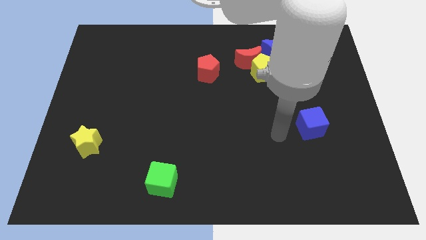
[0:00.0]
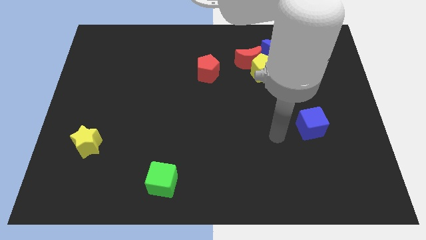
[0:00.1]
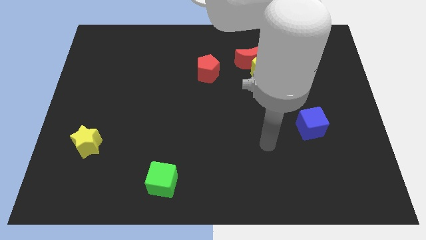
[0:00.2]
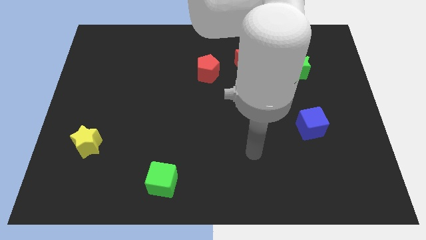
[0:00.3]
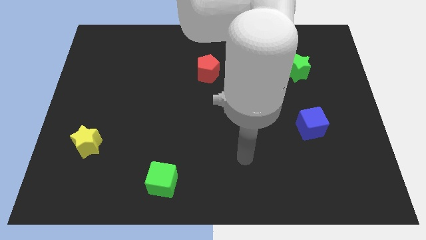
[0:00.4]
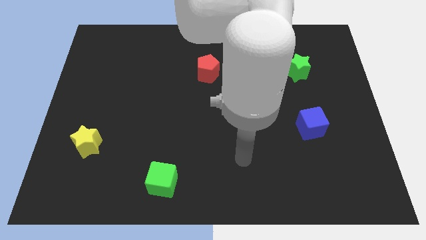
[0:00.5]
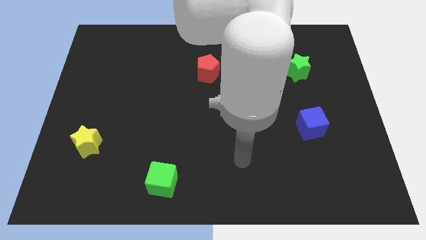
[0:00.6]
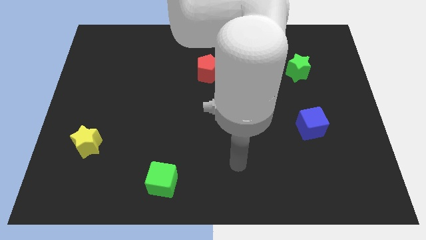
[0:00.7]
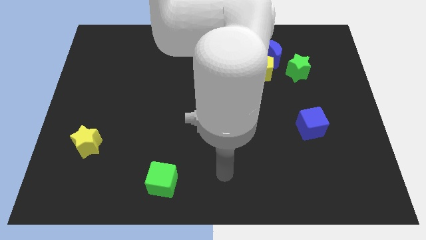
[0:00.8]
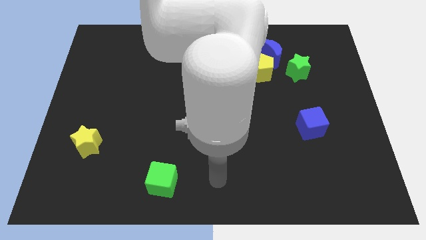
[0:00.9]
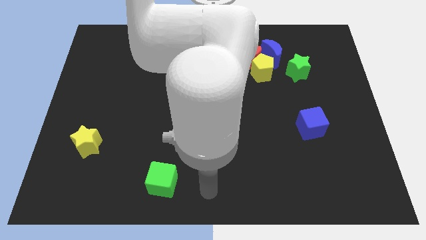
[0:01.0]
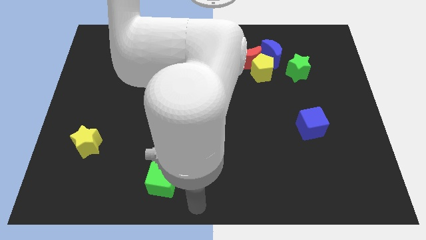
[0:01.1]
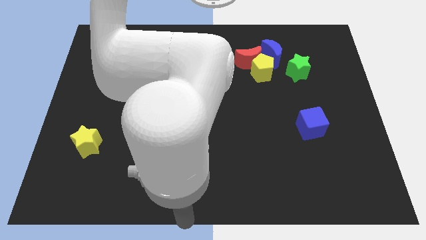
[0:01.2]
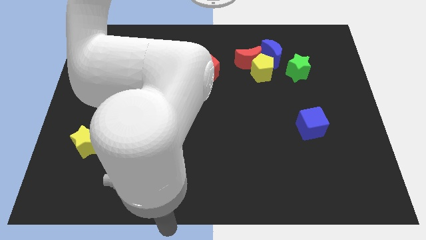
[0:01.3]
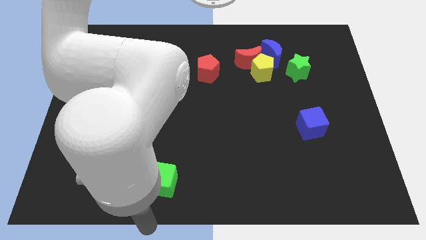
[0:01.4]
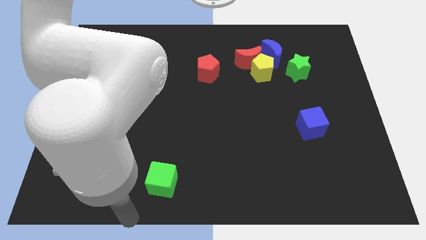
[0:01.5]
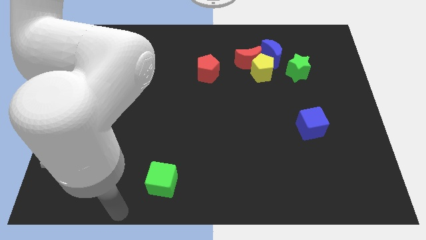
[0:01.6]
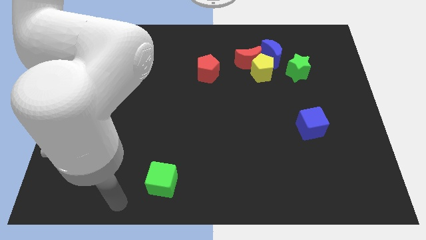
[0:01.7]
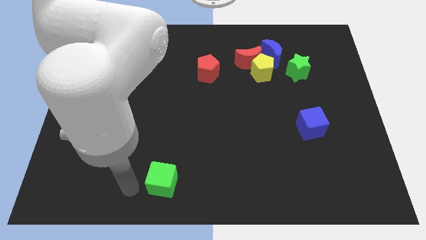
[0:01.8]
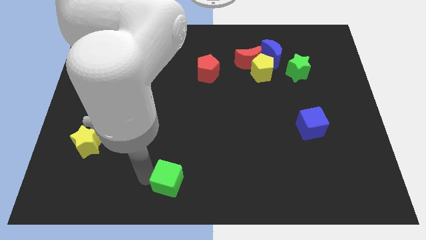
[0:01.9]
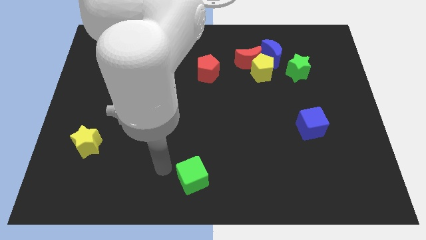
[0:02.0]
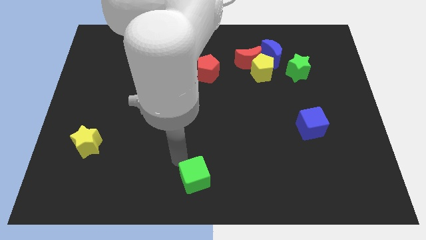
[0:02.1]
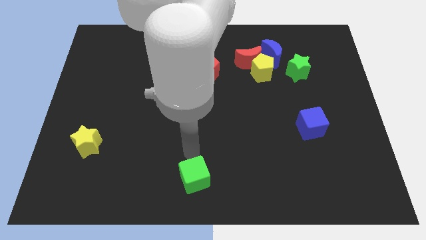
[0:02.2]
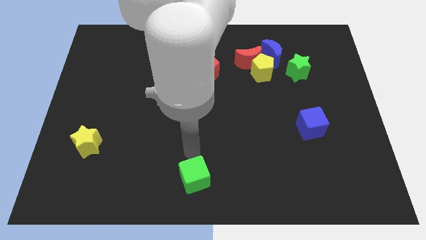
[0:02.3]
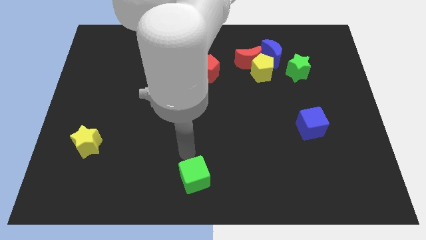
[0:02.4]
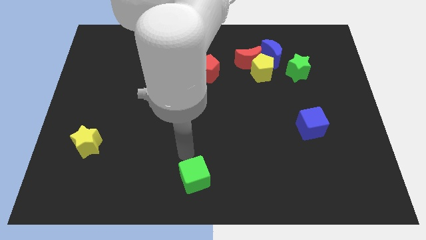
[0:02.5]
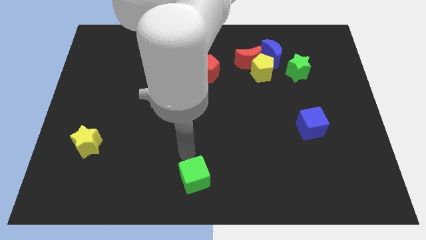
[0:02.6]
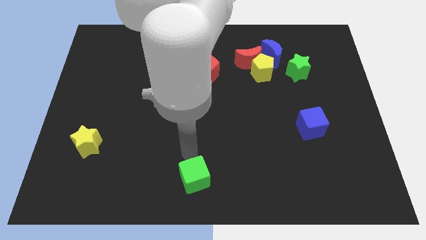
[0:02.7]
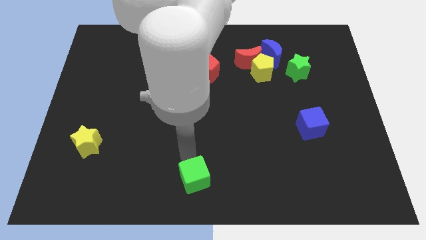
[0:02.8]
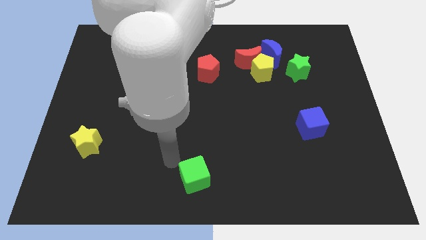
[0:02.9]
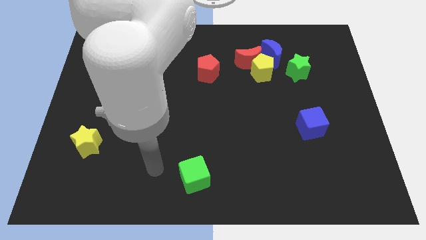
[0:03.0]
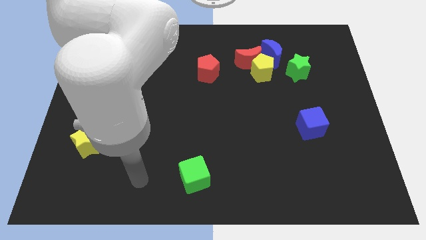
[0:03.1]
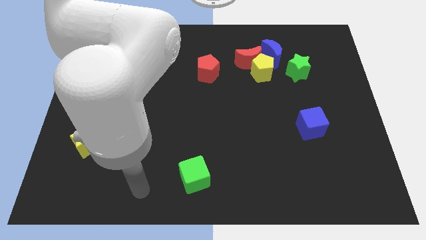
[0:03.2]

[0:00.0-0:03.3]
slightly move the green cube to the bottom center

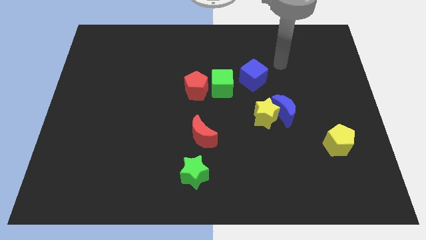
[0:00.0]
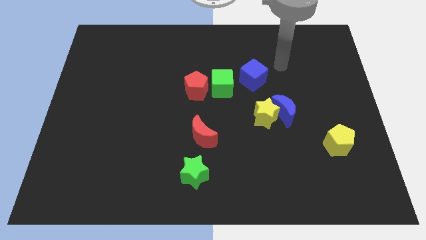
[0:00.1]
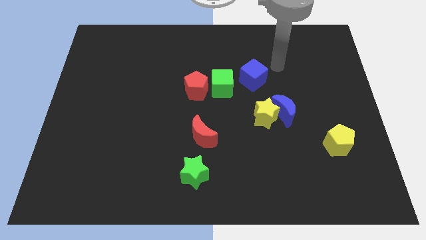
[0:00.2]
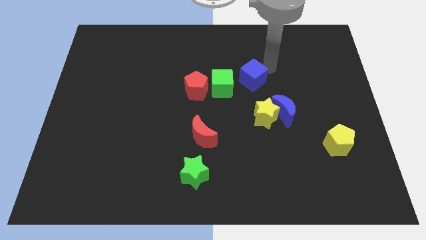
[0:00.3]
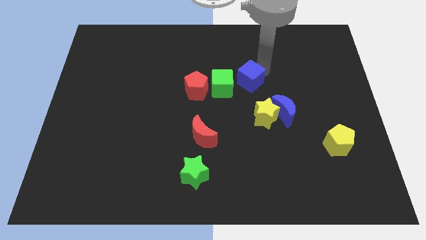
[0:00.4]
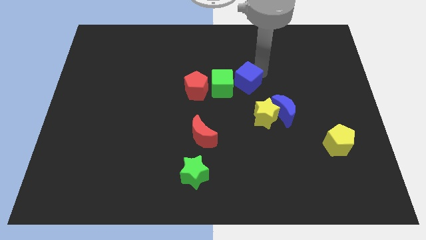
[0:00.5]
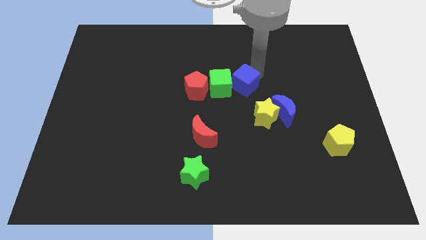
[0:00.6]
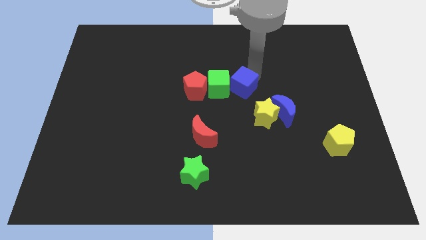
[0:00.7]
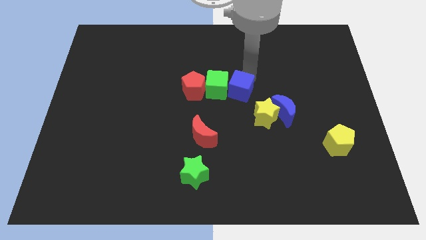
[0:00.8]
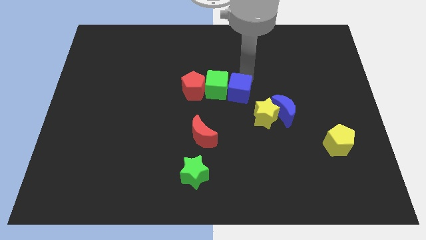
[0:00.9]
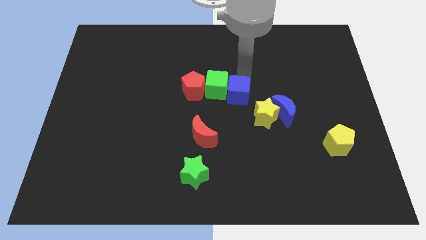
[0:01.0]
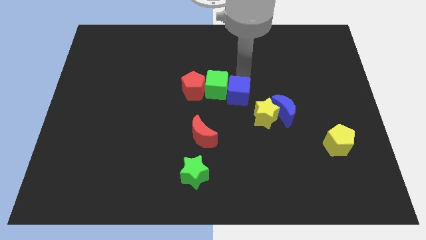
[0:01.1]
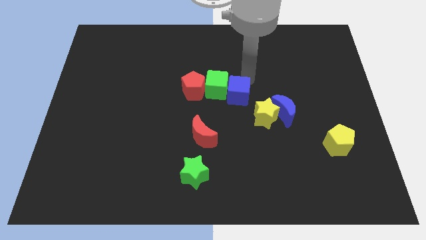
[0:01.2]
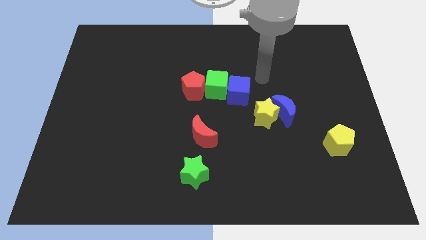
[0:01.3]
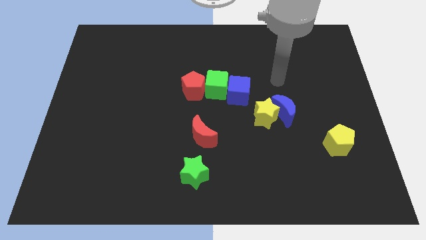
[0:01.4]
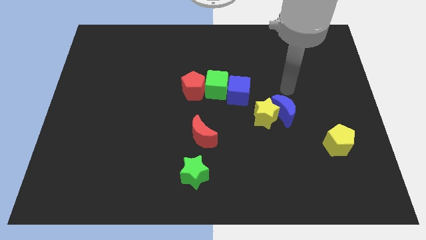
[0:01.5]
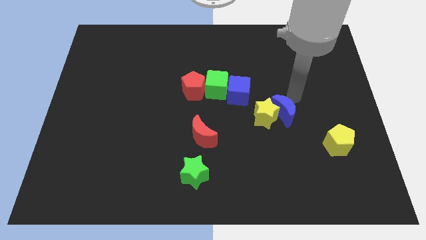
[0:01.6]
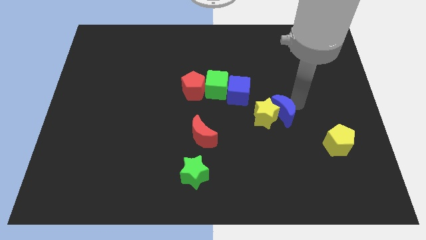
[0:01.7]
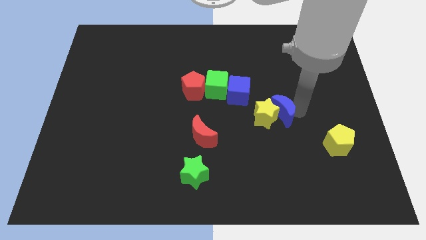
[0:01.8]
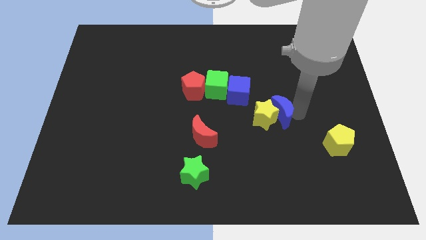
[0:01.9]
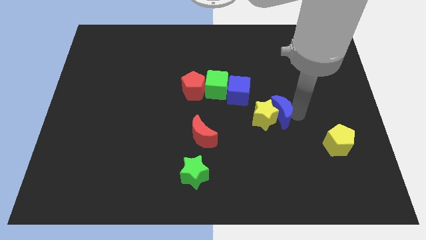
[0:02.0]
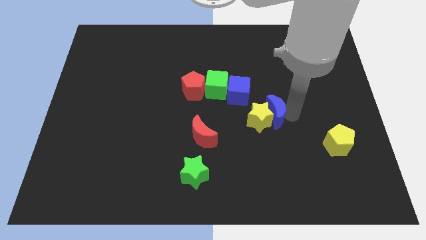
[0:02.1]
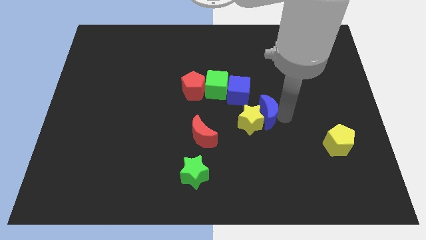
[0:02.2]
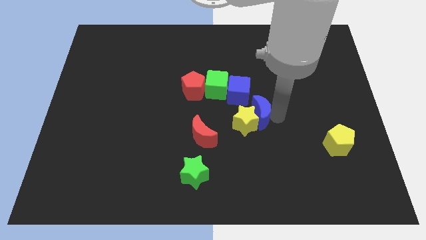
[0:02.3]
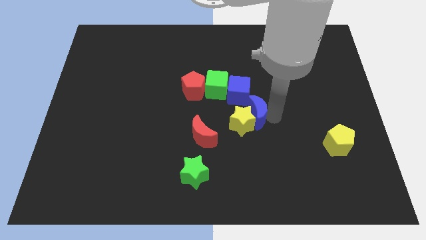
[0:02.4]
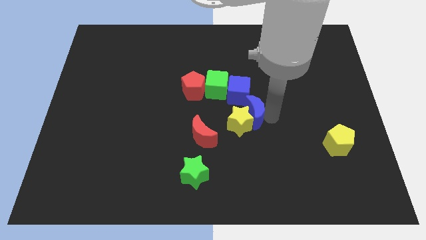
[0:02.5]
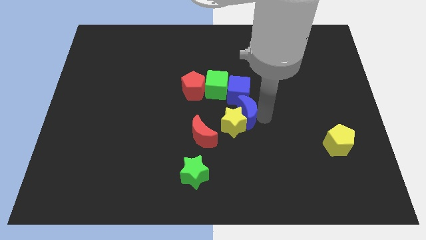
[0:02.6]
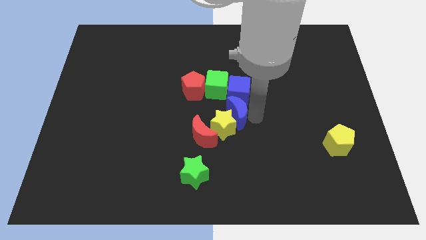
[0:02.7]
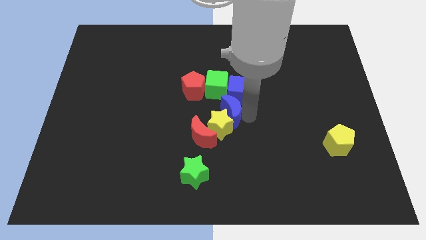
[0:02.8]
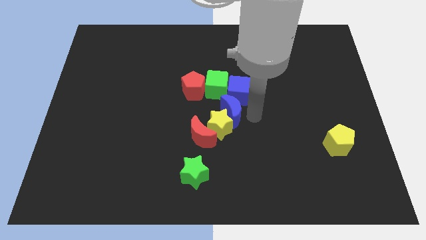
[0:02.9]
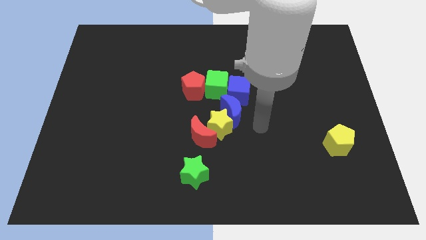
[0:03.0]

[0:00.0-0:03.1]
move the blue cube close the green cube

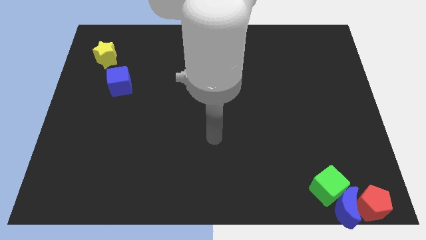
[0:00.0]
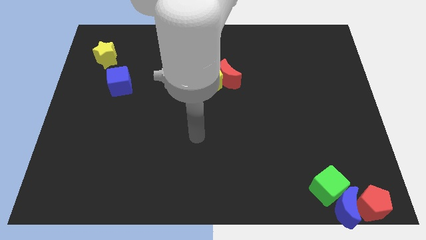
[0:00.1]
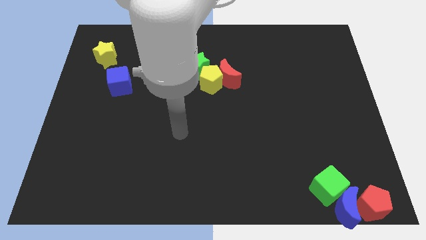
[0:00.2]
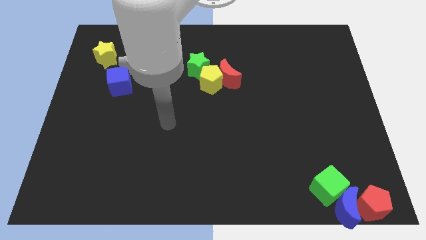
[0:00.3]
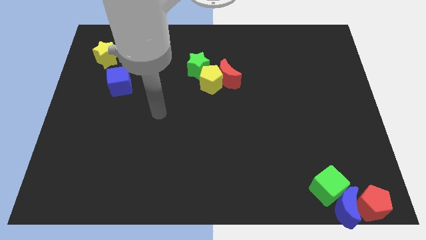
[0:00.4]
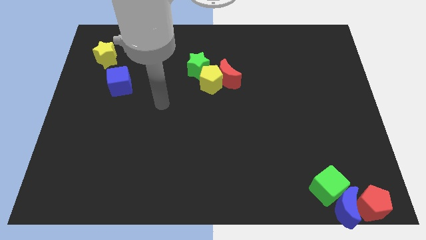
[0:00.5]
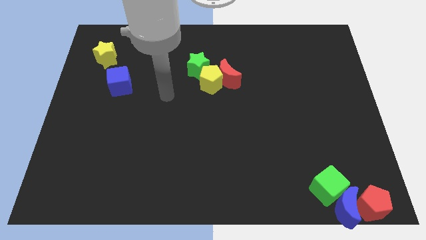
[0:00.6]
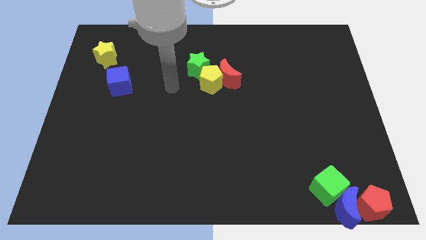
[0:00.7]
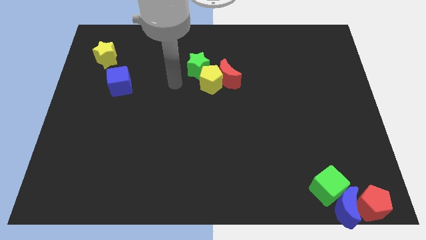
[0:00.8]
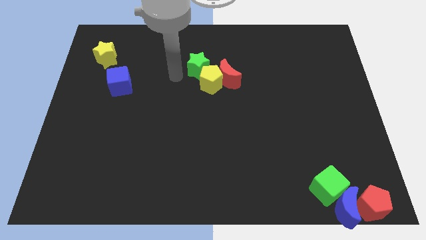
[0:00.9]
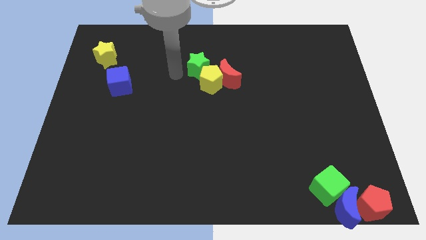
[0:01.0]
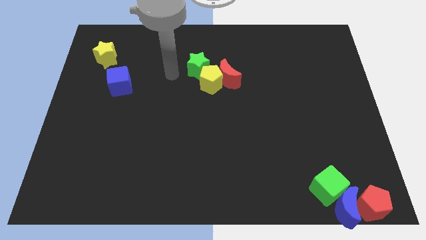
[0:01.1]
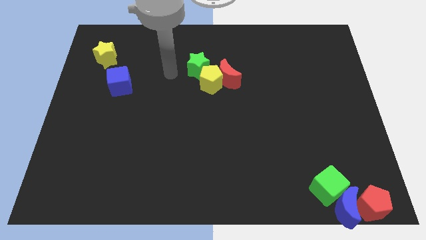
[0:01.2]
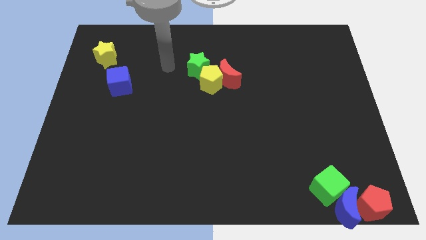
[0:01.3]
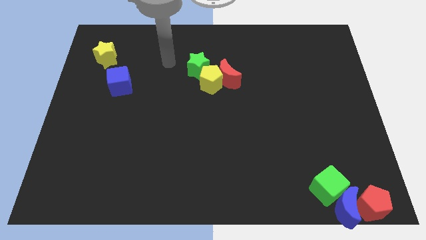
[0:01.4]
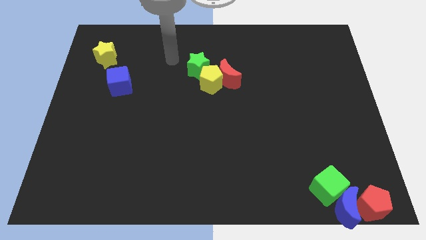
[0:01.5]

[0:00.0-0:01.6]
move your arm towards the green star

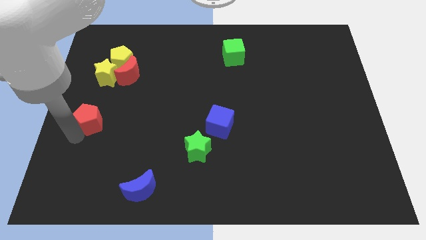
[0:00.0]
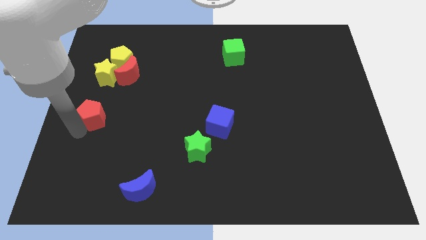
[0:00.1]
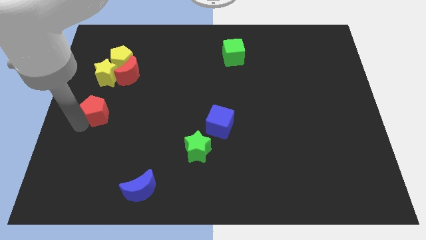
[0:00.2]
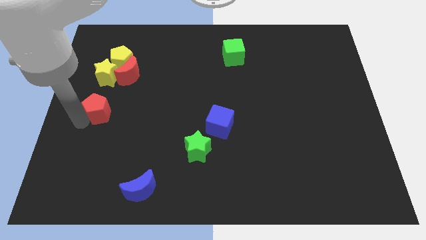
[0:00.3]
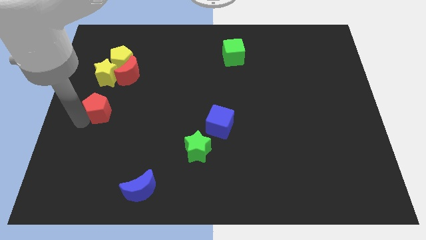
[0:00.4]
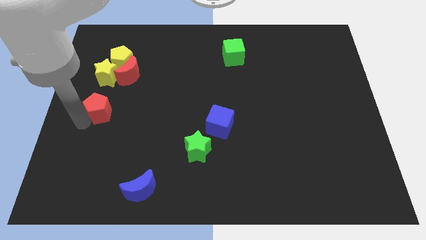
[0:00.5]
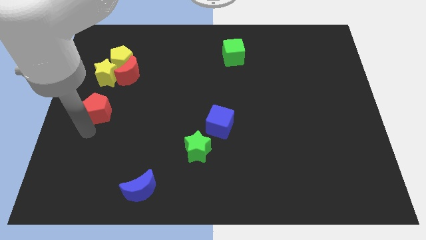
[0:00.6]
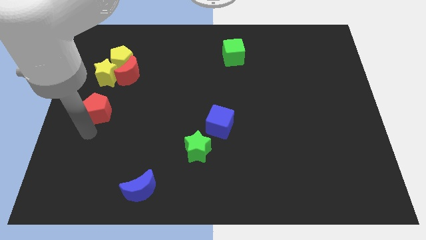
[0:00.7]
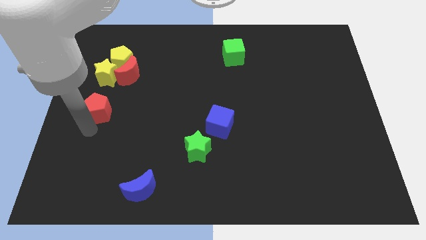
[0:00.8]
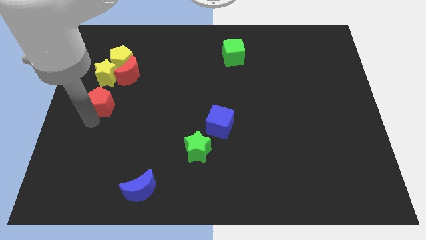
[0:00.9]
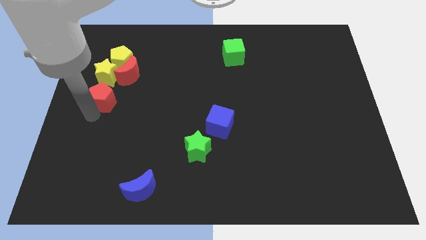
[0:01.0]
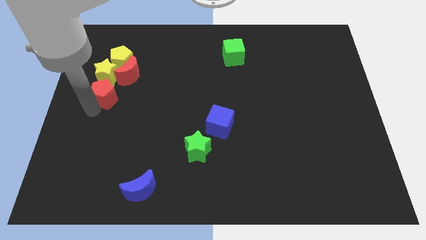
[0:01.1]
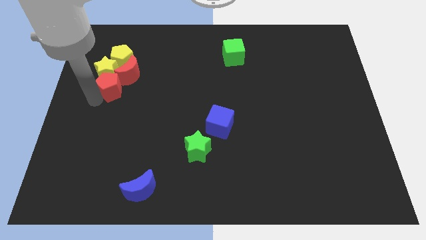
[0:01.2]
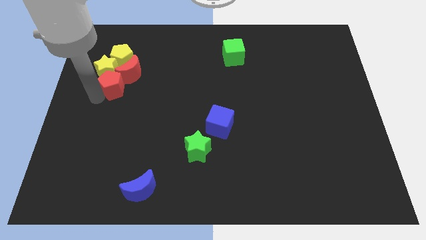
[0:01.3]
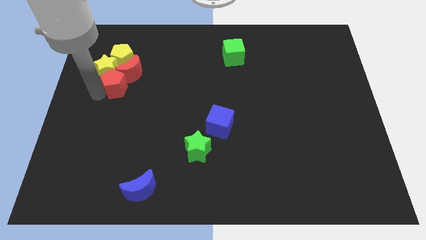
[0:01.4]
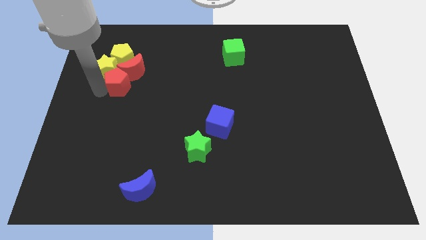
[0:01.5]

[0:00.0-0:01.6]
push the red pentagon into the red moon
